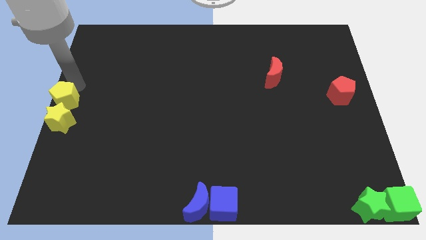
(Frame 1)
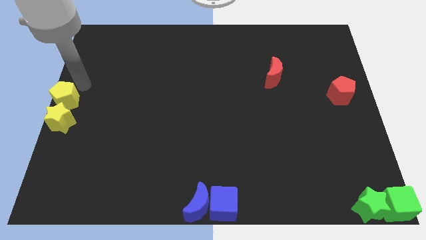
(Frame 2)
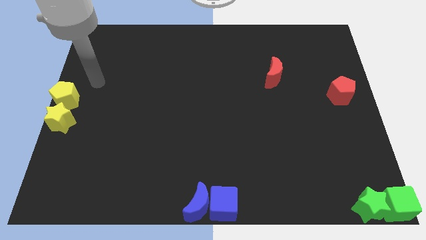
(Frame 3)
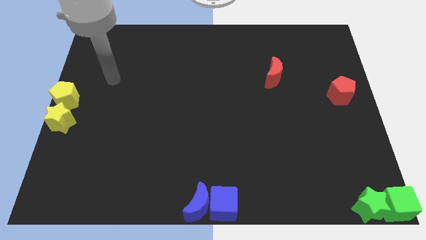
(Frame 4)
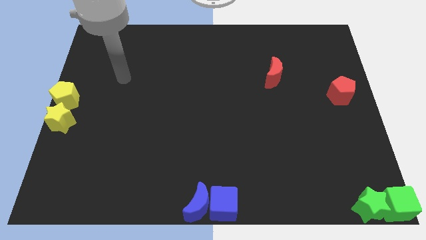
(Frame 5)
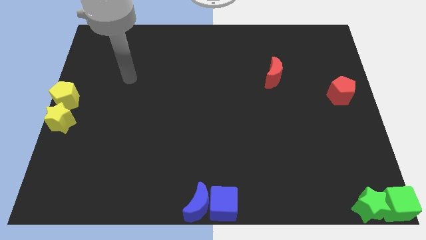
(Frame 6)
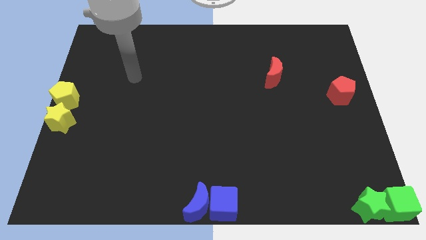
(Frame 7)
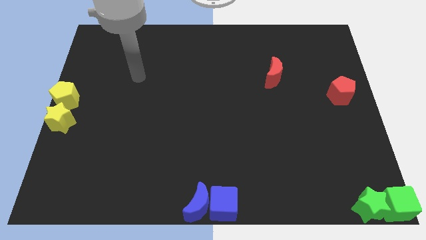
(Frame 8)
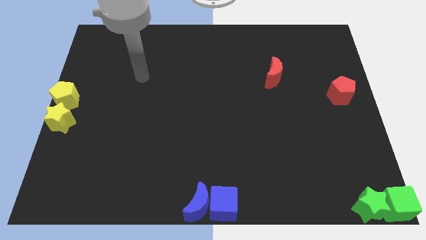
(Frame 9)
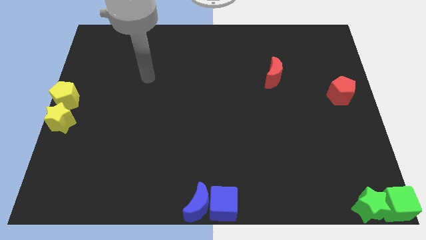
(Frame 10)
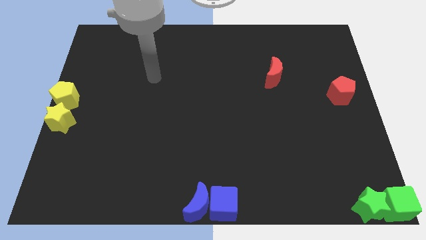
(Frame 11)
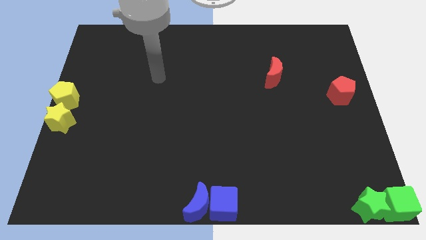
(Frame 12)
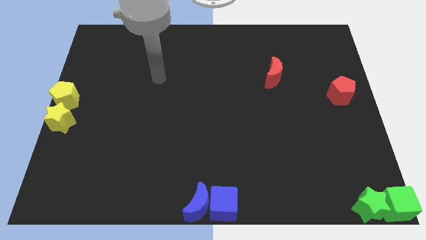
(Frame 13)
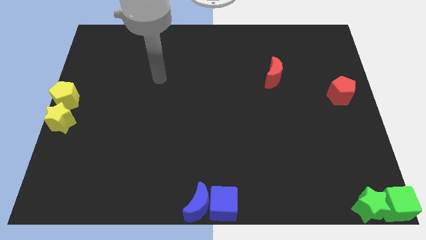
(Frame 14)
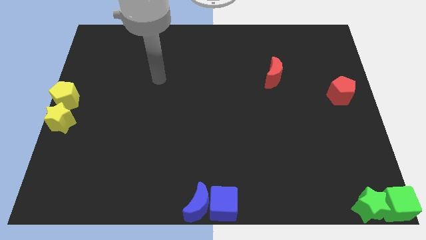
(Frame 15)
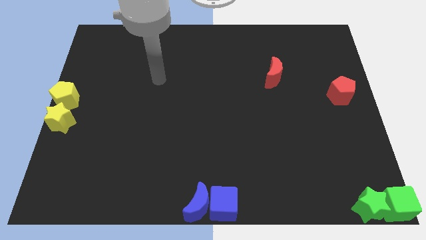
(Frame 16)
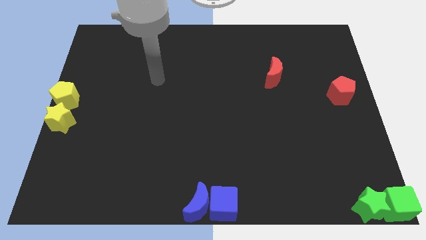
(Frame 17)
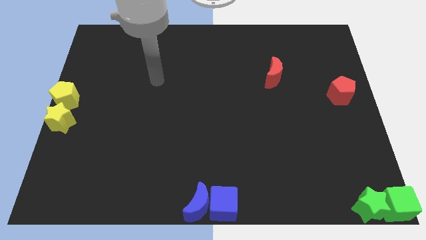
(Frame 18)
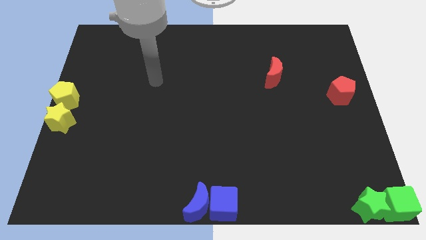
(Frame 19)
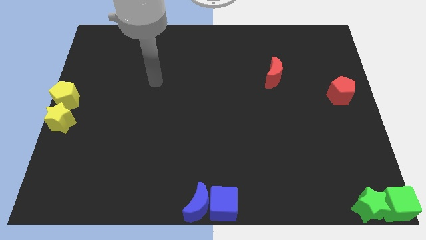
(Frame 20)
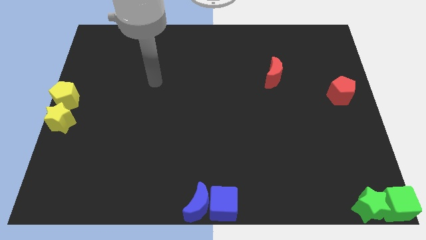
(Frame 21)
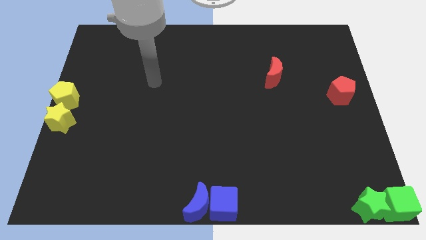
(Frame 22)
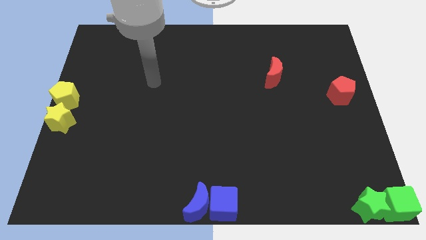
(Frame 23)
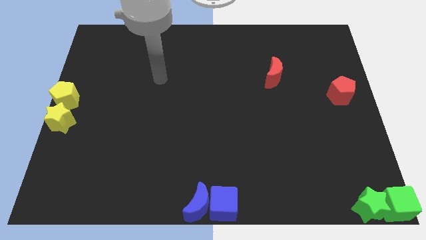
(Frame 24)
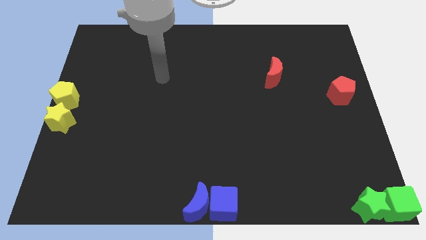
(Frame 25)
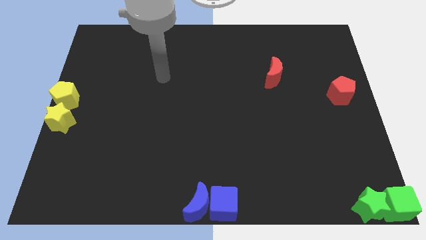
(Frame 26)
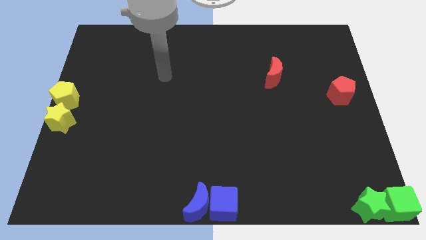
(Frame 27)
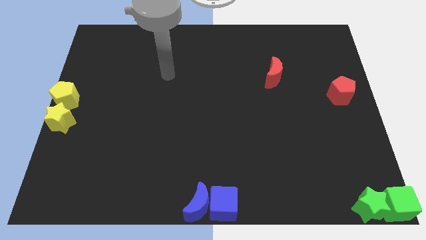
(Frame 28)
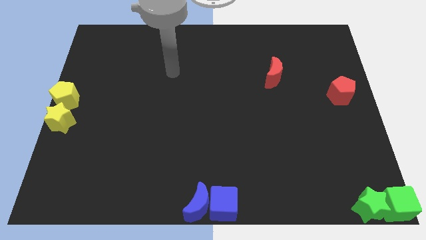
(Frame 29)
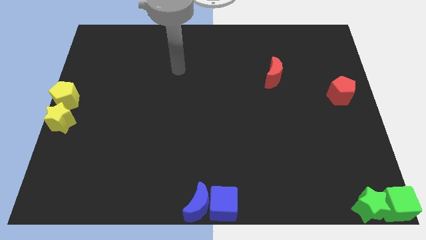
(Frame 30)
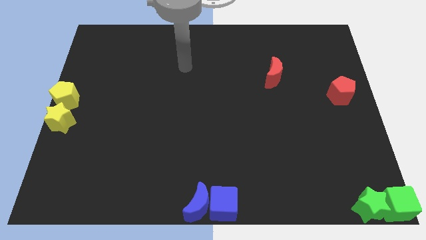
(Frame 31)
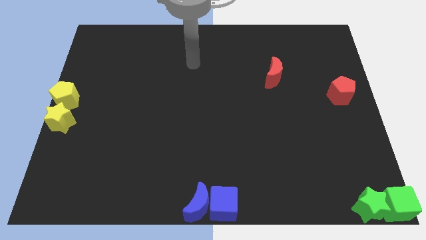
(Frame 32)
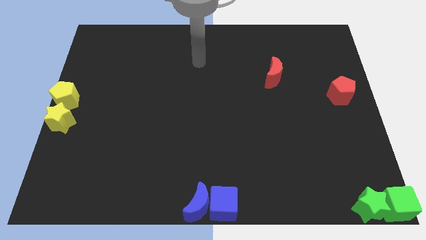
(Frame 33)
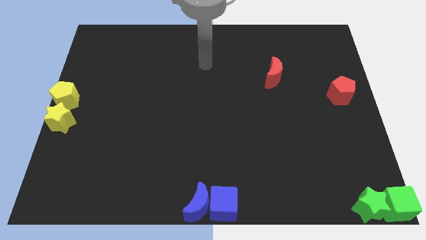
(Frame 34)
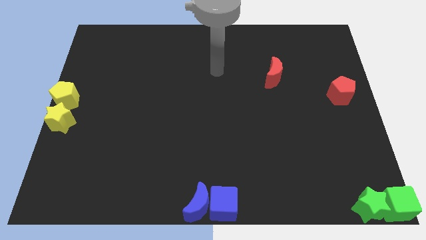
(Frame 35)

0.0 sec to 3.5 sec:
move your arm away from the yellow pentagon

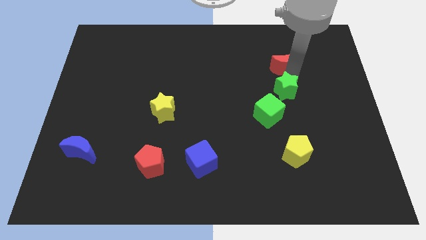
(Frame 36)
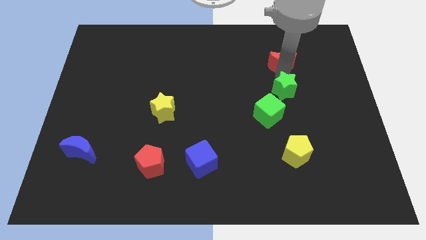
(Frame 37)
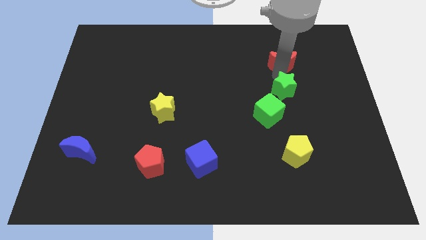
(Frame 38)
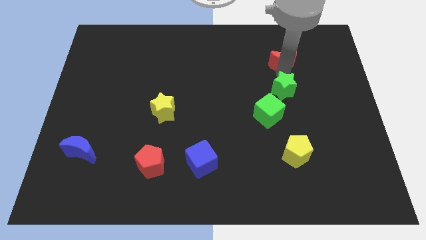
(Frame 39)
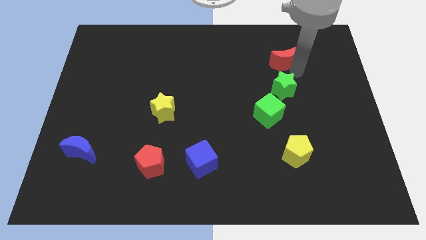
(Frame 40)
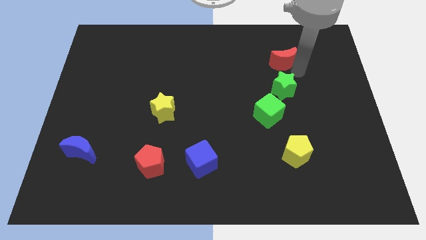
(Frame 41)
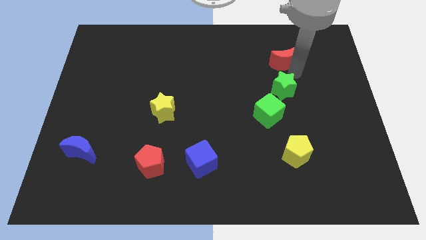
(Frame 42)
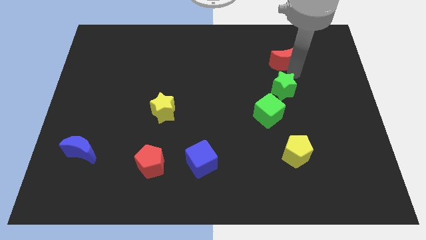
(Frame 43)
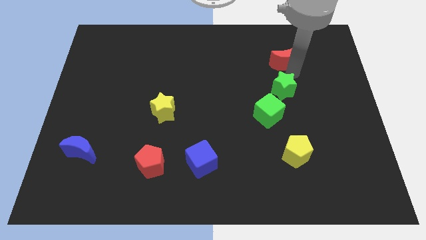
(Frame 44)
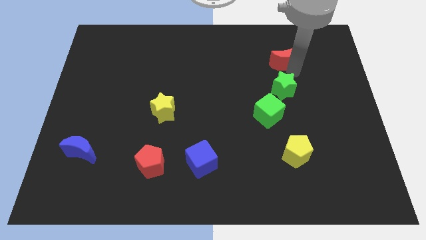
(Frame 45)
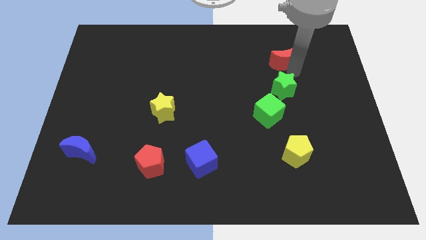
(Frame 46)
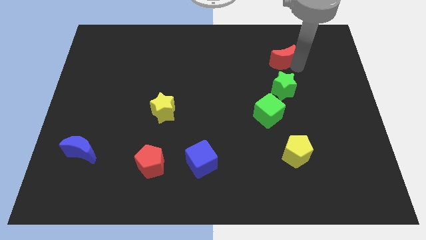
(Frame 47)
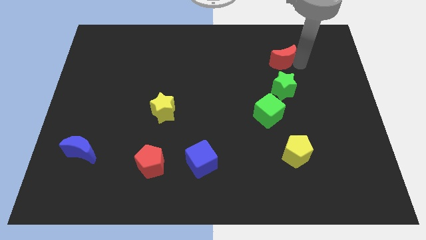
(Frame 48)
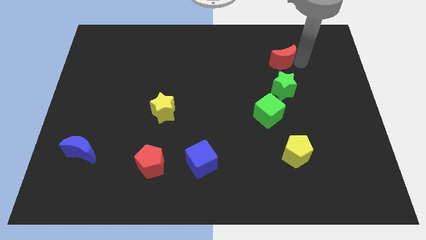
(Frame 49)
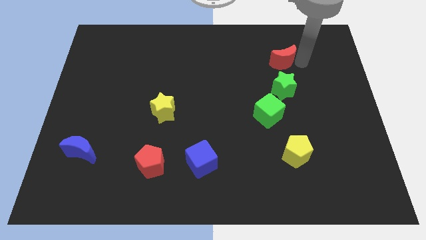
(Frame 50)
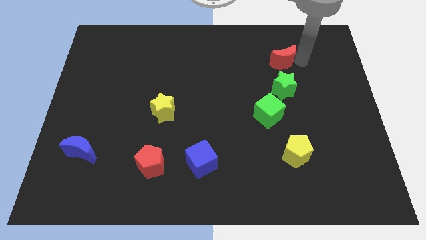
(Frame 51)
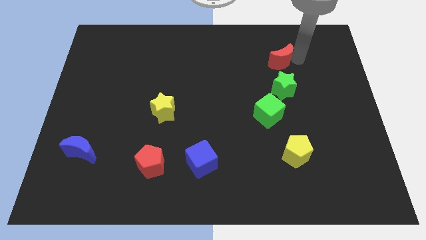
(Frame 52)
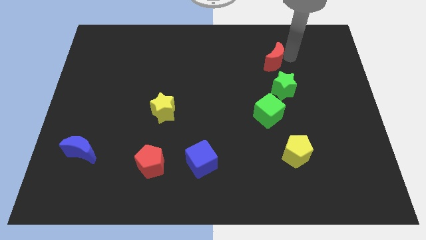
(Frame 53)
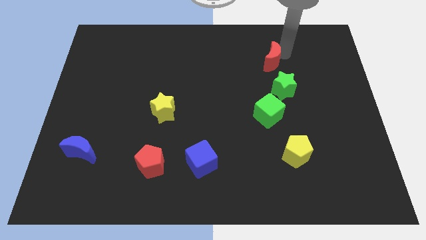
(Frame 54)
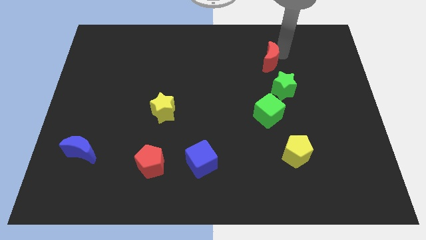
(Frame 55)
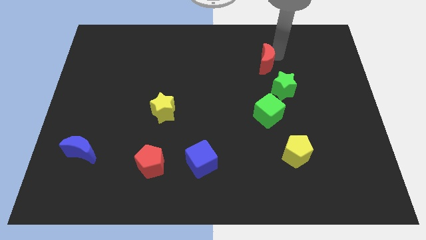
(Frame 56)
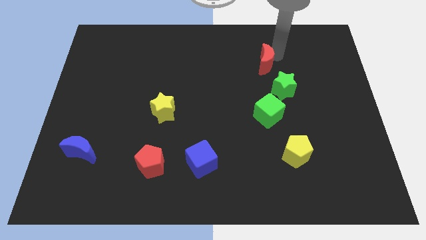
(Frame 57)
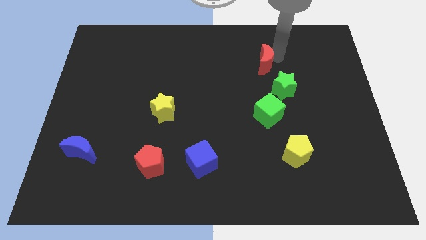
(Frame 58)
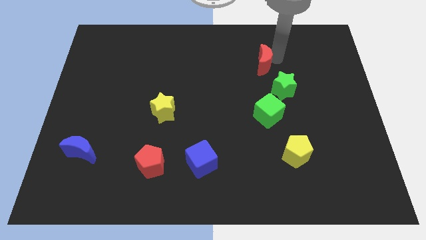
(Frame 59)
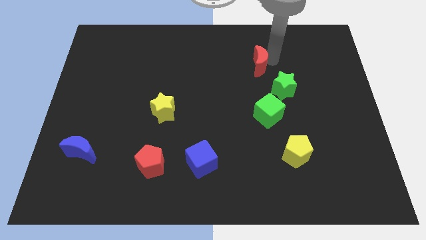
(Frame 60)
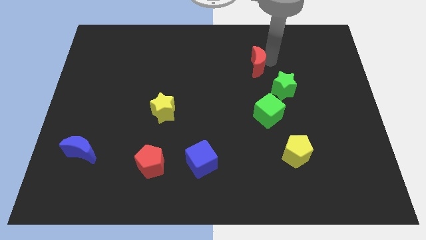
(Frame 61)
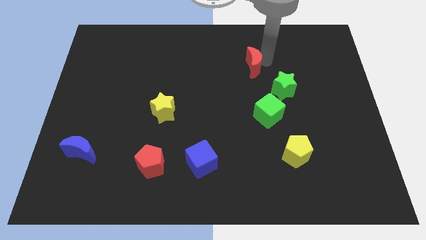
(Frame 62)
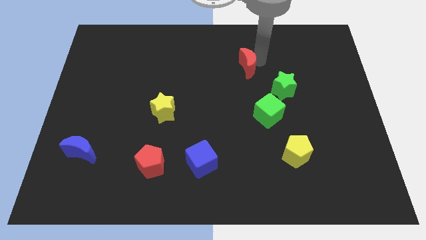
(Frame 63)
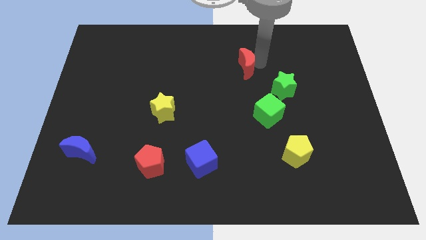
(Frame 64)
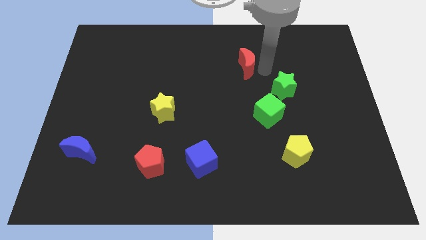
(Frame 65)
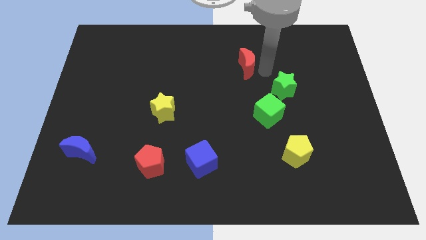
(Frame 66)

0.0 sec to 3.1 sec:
place red crescent above green cube

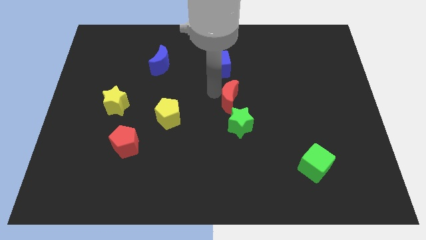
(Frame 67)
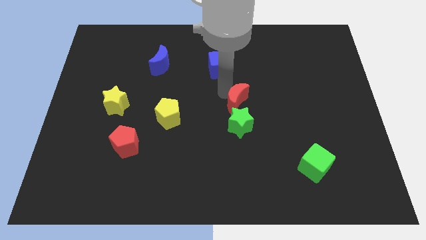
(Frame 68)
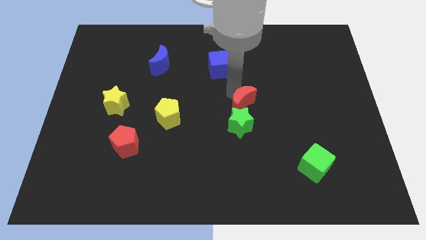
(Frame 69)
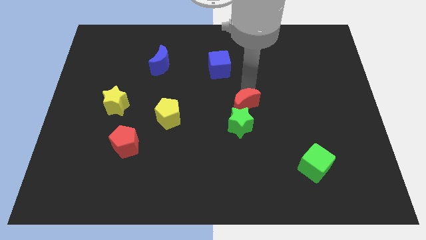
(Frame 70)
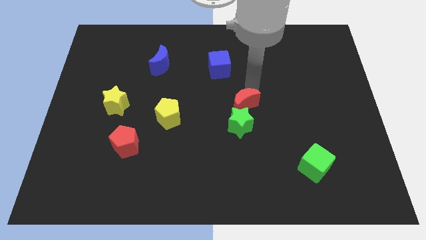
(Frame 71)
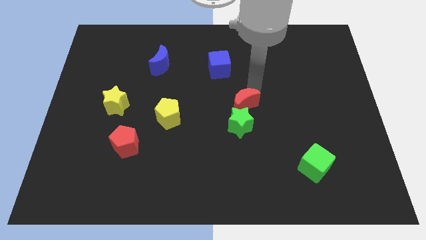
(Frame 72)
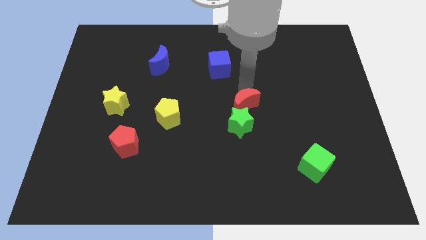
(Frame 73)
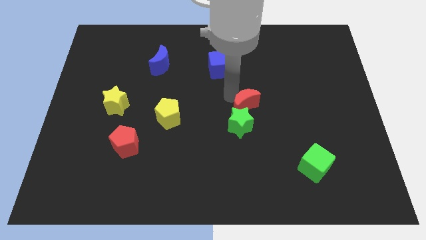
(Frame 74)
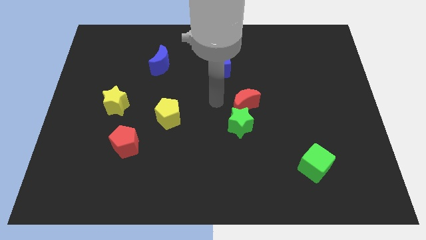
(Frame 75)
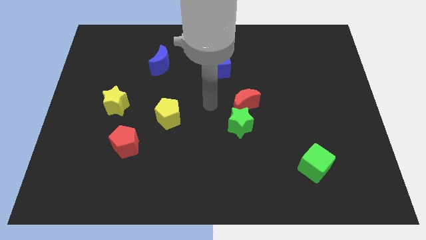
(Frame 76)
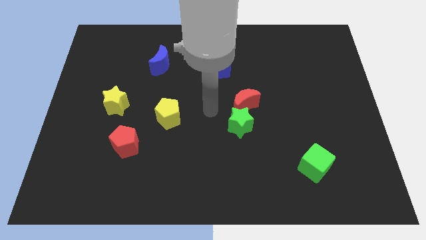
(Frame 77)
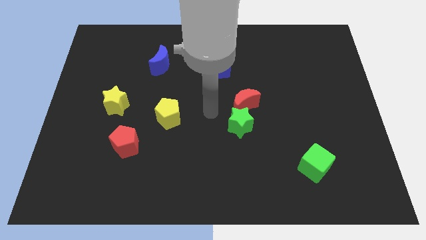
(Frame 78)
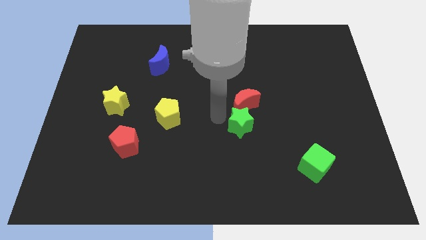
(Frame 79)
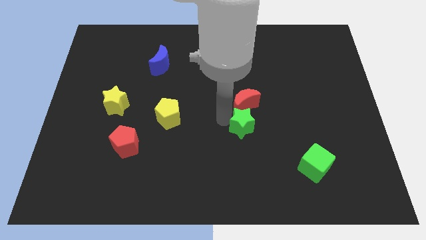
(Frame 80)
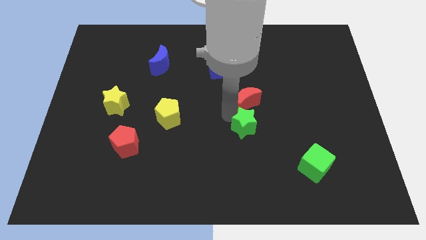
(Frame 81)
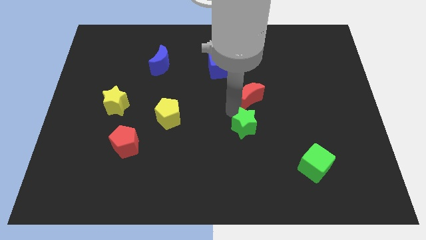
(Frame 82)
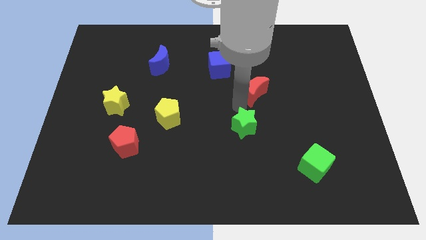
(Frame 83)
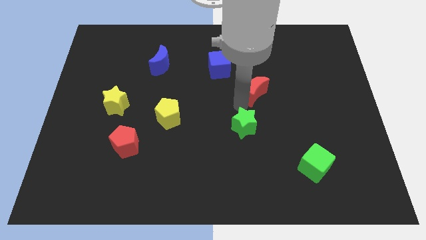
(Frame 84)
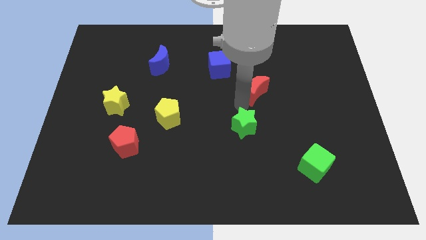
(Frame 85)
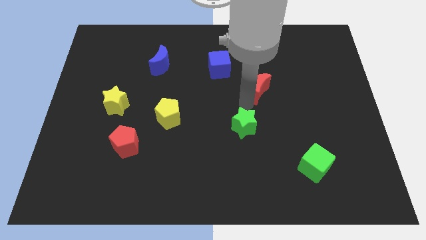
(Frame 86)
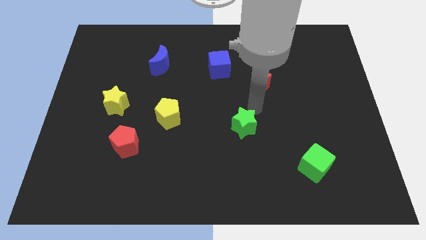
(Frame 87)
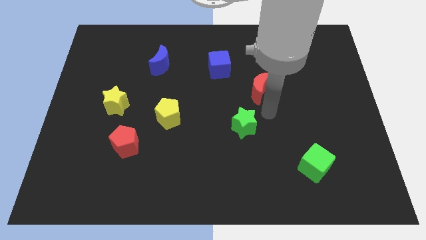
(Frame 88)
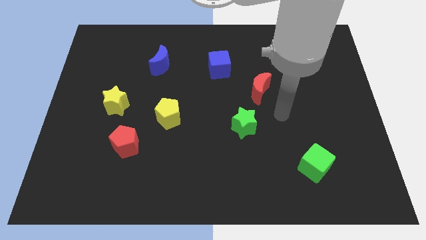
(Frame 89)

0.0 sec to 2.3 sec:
push the red crescent diagonal to the blue cube slightly

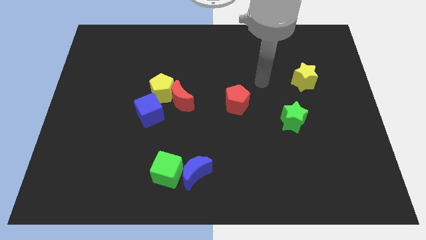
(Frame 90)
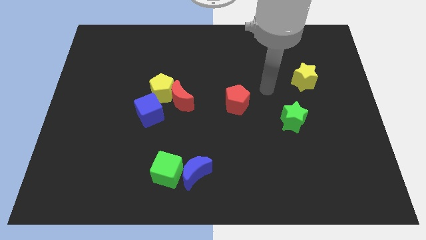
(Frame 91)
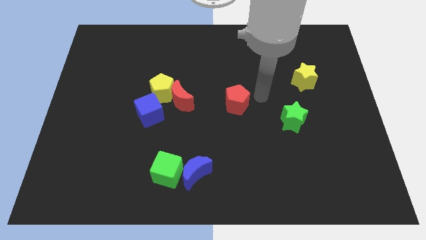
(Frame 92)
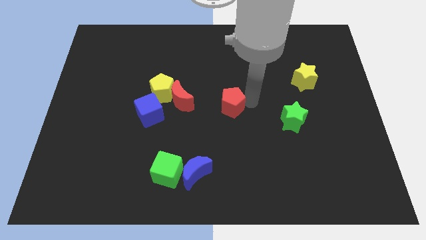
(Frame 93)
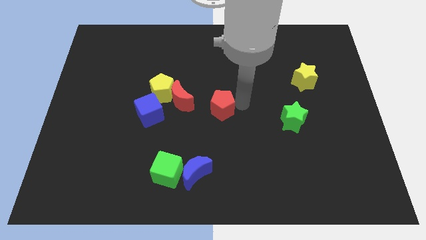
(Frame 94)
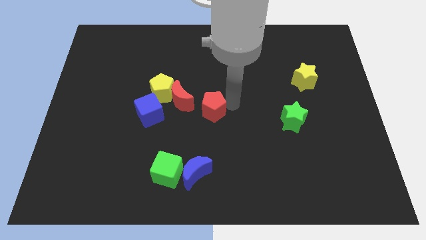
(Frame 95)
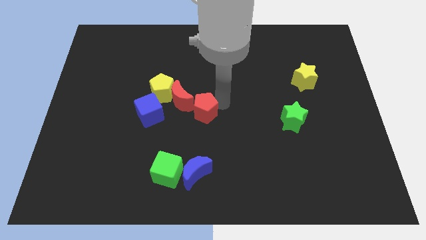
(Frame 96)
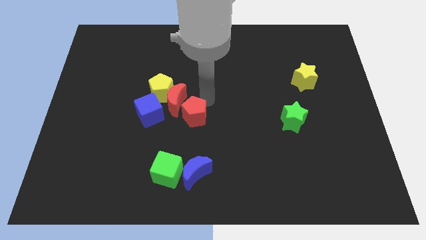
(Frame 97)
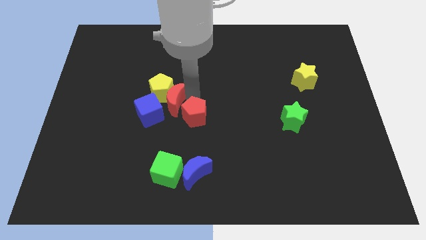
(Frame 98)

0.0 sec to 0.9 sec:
push the red pentagon to the right of the red moon
